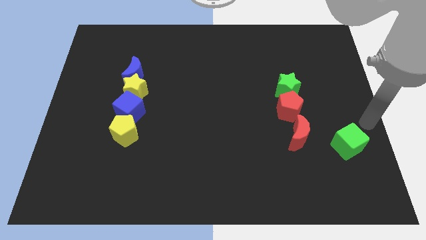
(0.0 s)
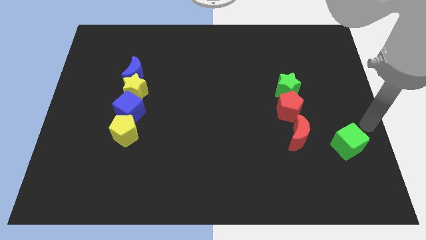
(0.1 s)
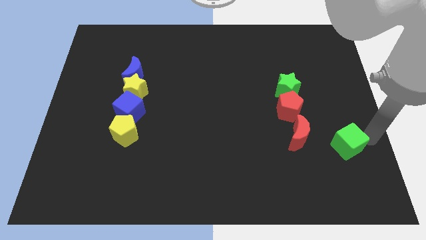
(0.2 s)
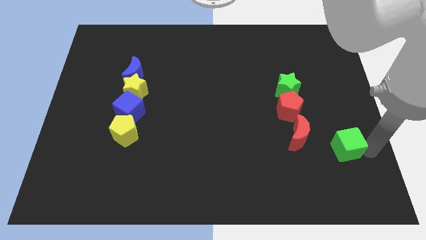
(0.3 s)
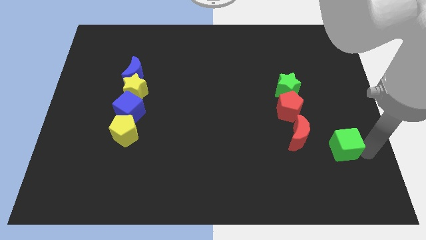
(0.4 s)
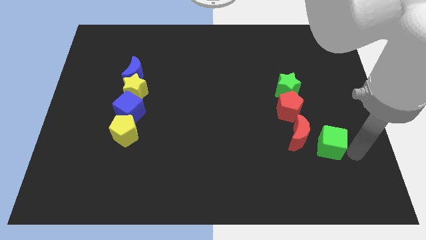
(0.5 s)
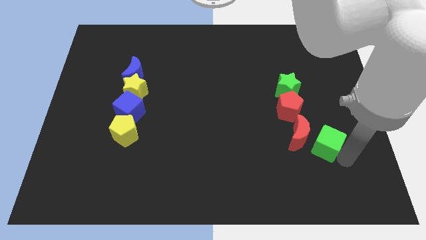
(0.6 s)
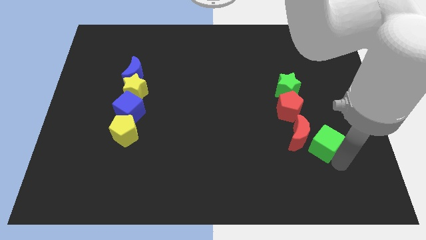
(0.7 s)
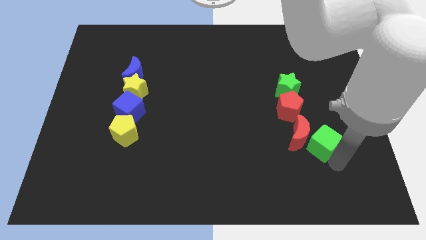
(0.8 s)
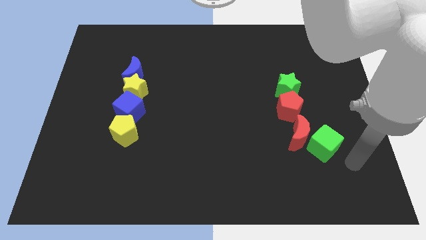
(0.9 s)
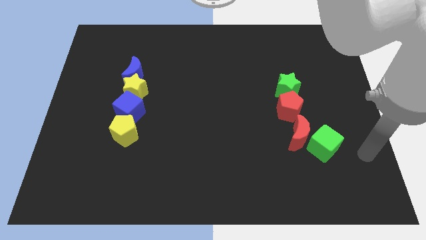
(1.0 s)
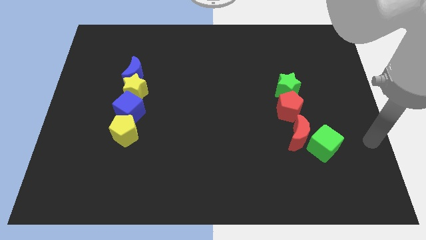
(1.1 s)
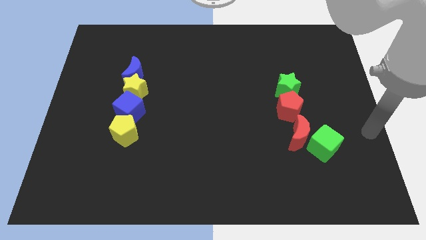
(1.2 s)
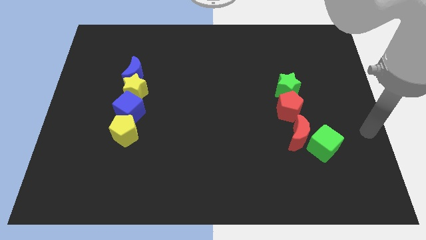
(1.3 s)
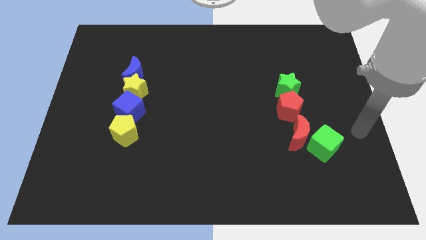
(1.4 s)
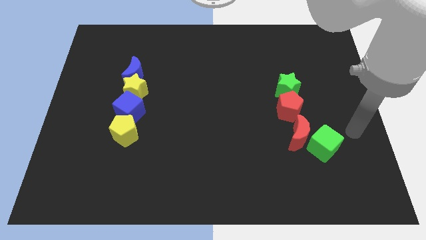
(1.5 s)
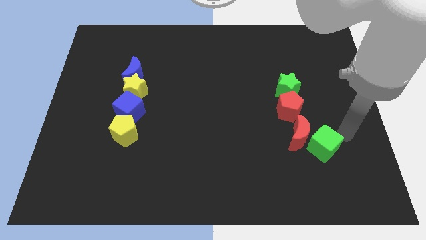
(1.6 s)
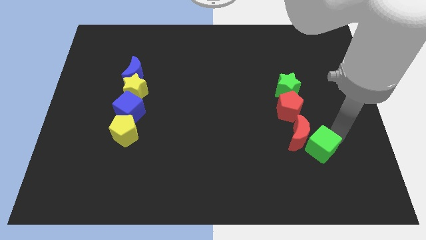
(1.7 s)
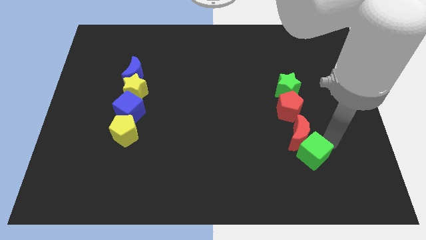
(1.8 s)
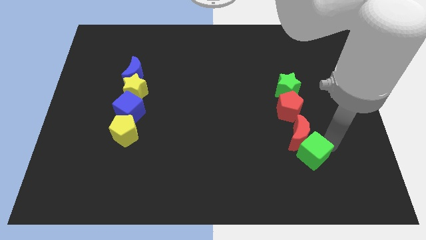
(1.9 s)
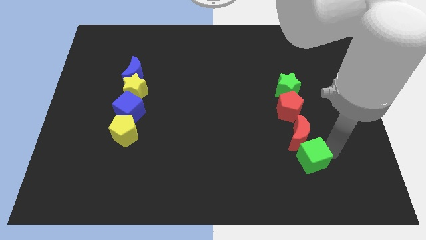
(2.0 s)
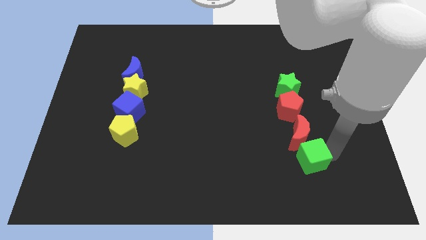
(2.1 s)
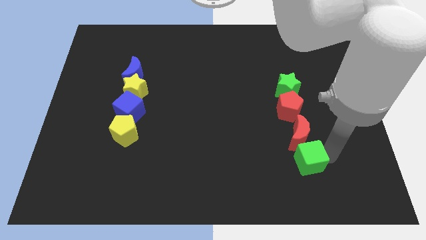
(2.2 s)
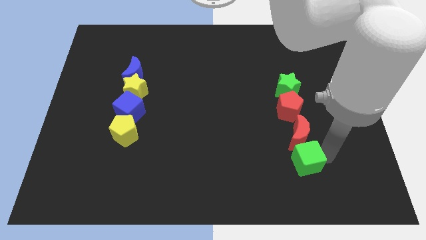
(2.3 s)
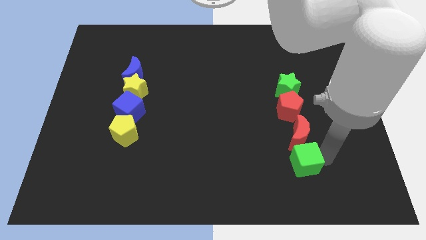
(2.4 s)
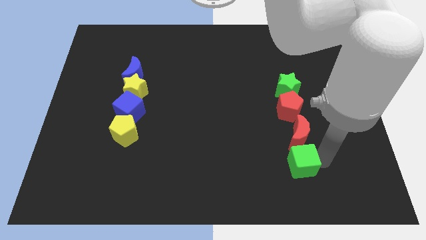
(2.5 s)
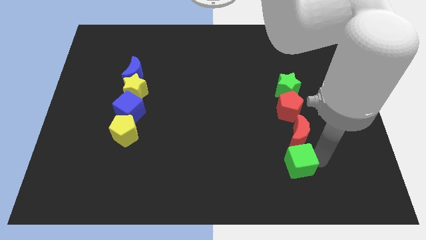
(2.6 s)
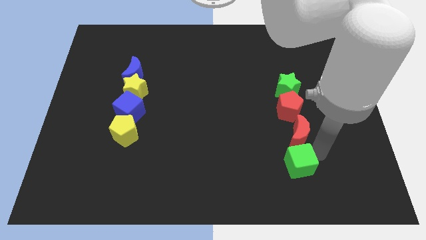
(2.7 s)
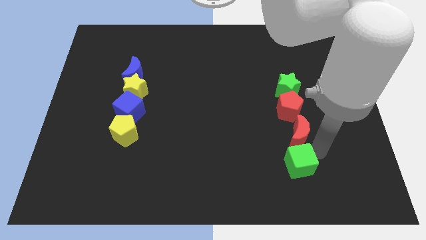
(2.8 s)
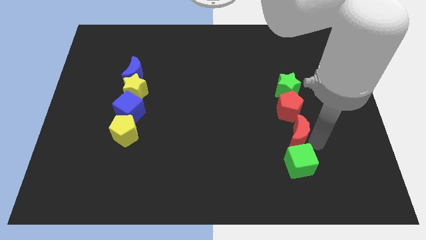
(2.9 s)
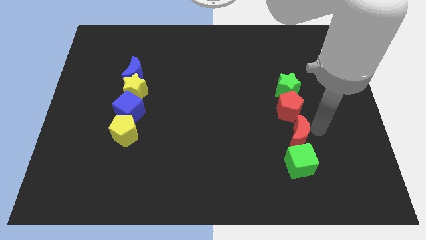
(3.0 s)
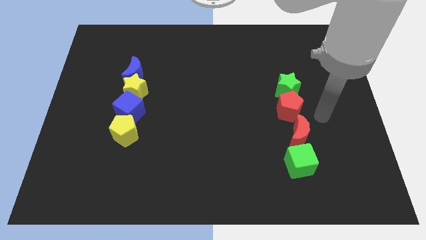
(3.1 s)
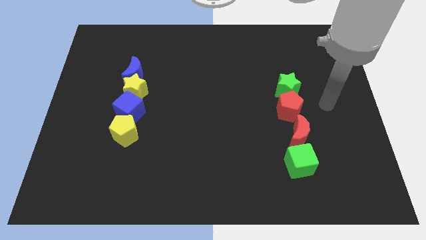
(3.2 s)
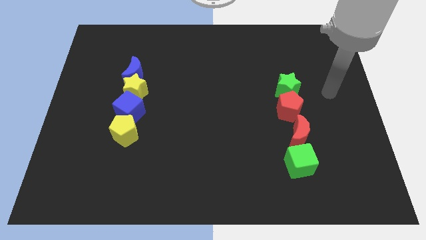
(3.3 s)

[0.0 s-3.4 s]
move the green cube to the bottom of the red moon

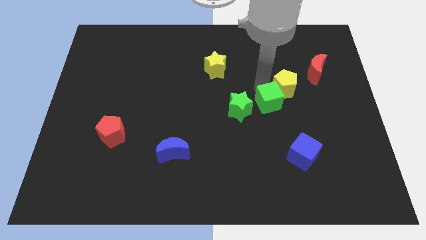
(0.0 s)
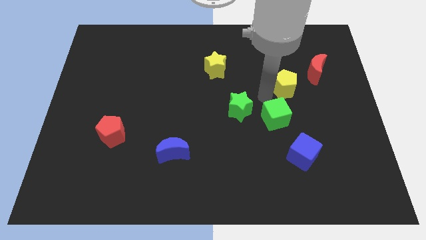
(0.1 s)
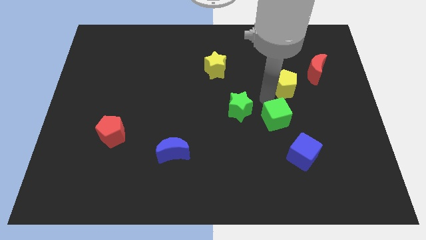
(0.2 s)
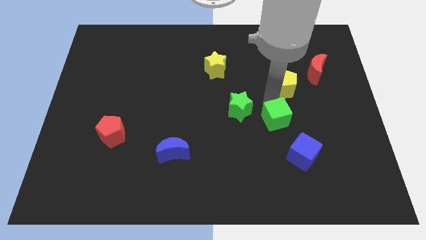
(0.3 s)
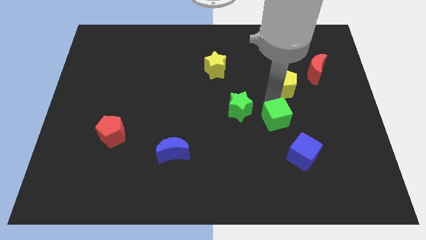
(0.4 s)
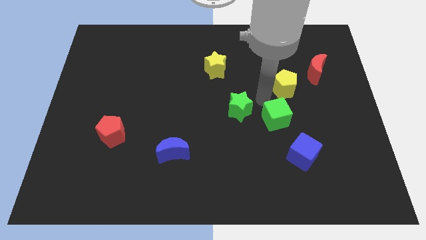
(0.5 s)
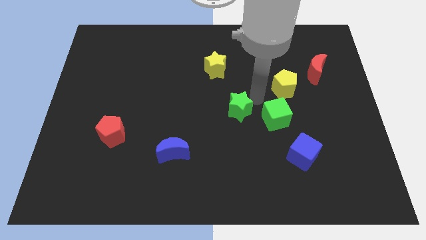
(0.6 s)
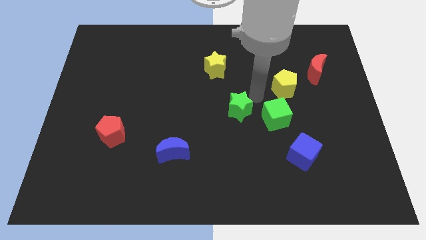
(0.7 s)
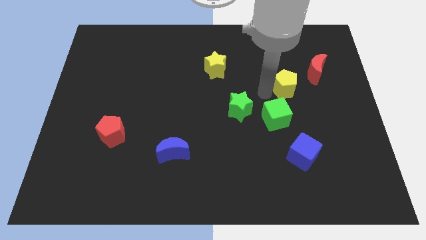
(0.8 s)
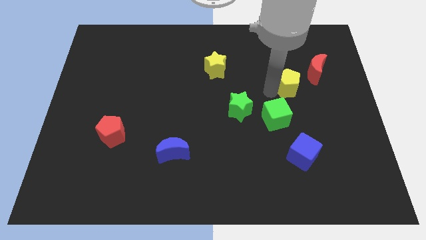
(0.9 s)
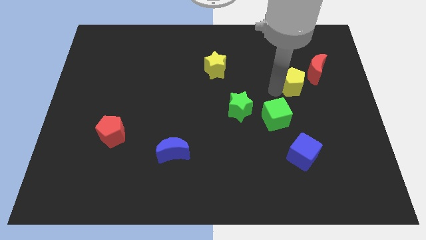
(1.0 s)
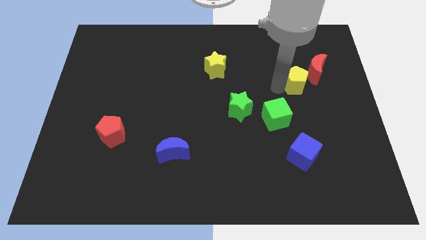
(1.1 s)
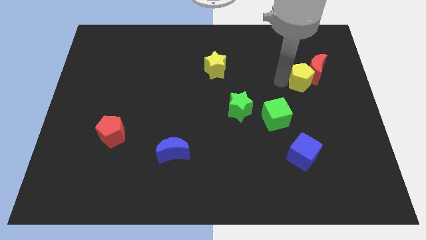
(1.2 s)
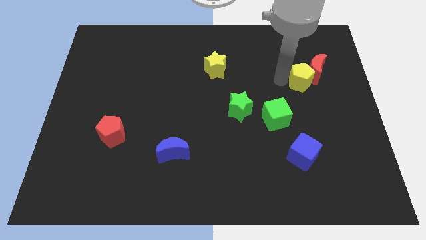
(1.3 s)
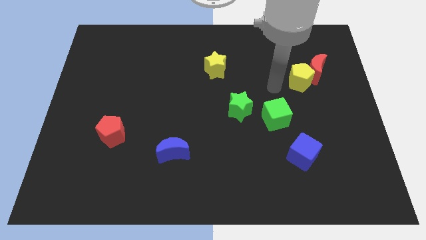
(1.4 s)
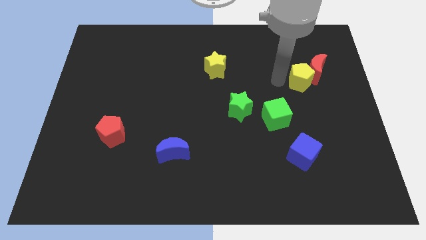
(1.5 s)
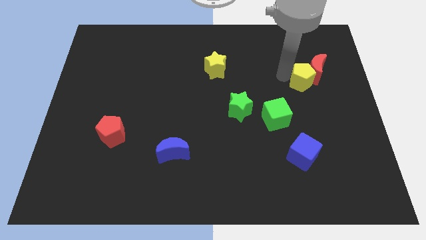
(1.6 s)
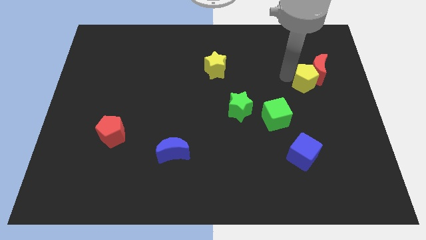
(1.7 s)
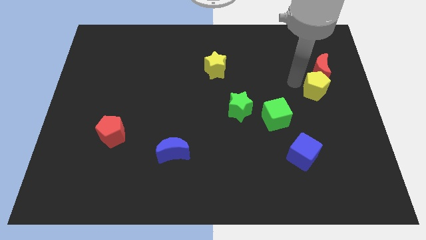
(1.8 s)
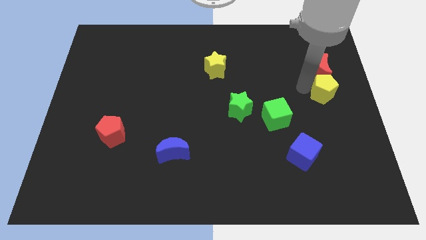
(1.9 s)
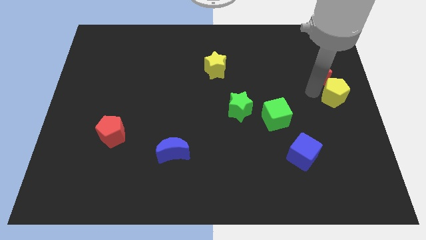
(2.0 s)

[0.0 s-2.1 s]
move yellow pentagon towards center right

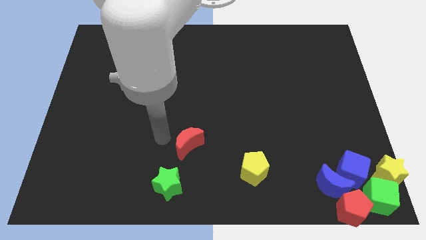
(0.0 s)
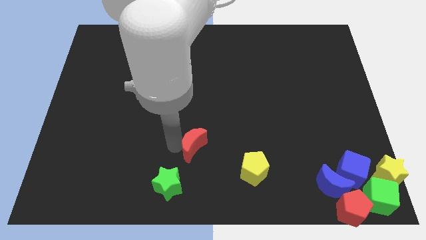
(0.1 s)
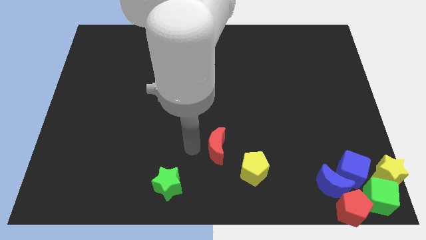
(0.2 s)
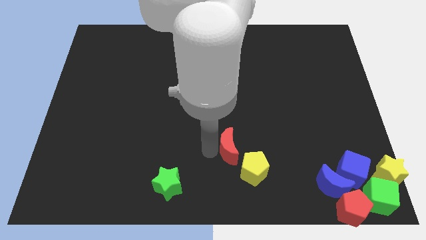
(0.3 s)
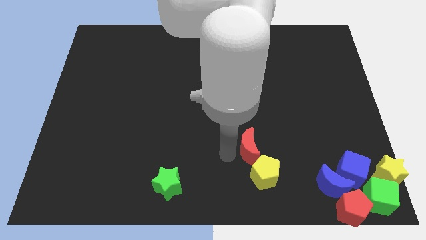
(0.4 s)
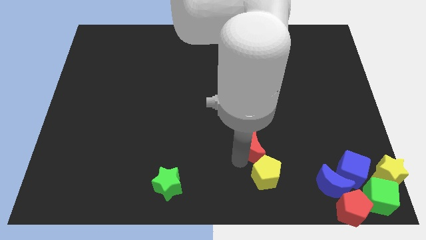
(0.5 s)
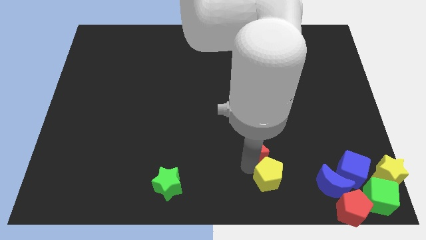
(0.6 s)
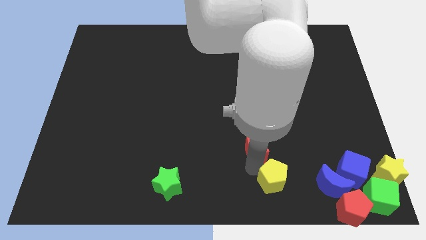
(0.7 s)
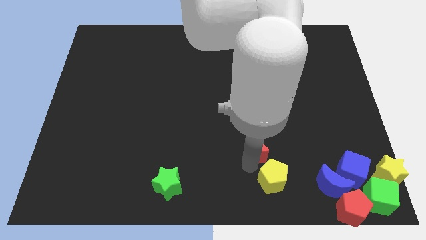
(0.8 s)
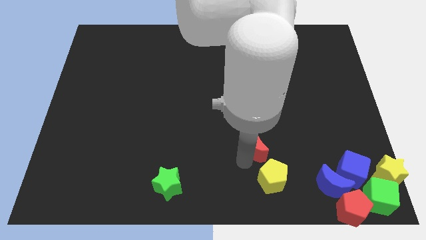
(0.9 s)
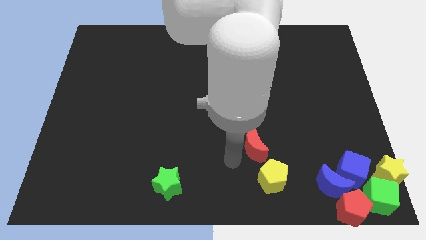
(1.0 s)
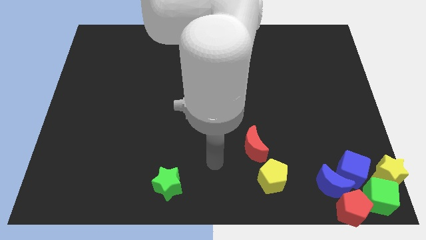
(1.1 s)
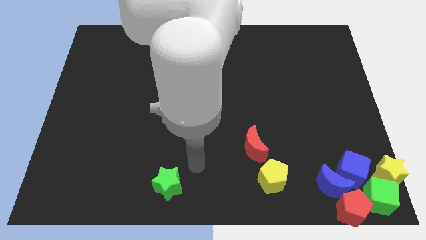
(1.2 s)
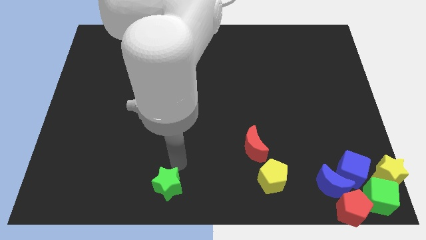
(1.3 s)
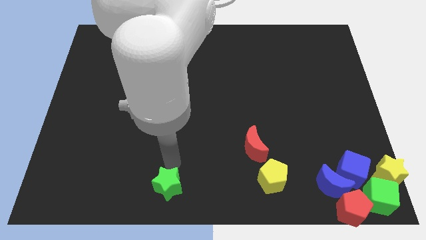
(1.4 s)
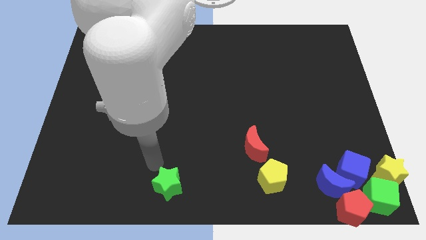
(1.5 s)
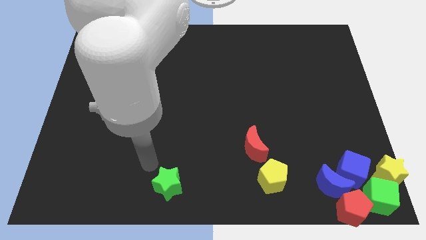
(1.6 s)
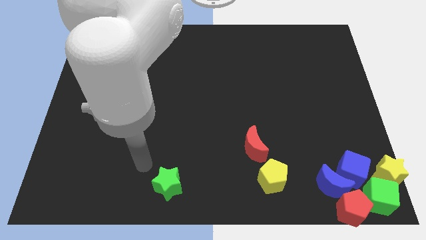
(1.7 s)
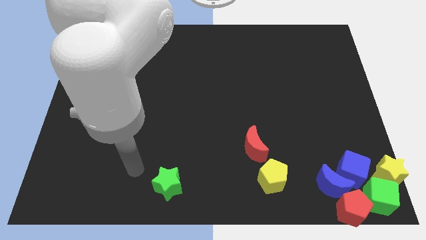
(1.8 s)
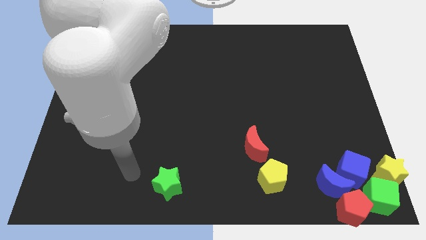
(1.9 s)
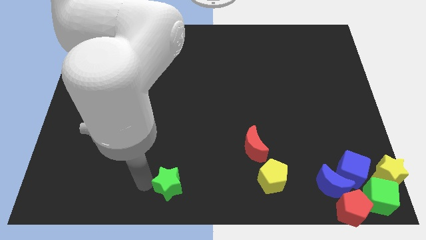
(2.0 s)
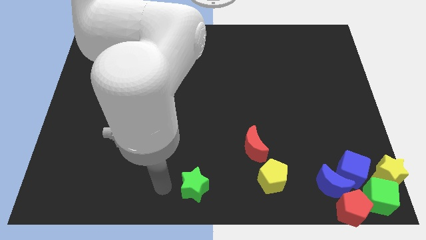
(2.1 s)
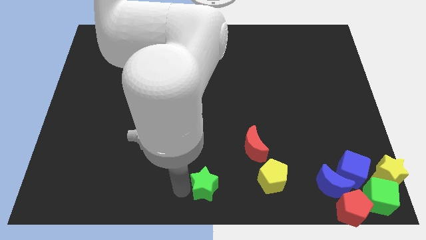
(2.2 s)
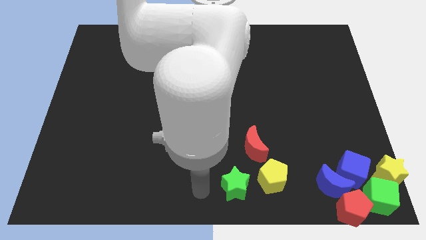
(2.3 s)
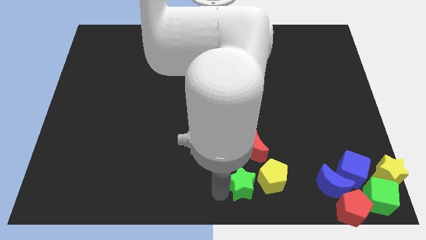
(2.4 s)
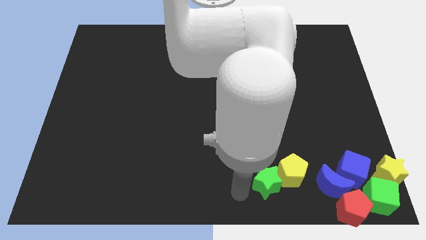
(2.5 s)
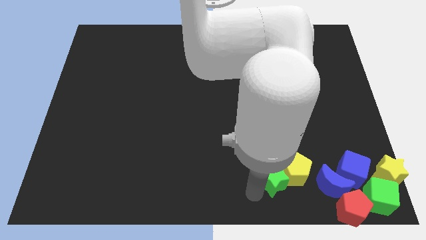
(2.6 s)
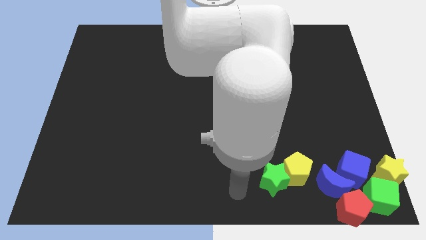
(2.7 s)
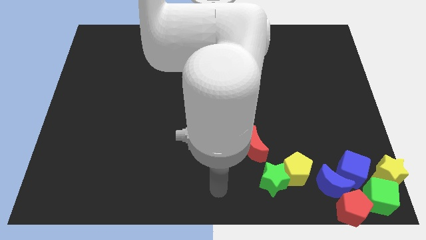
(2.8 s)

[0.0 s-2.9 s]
place red moon and green star towards the yellow pentagon at bottom center

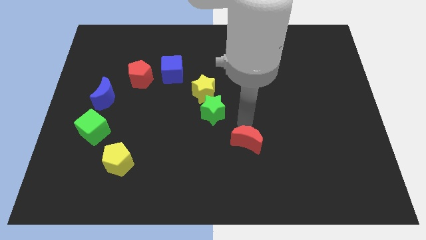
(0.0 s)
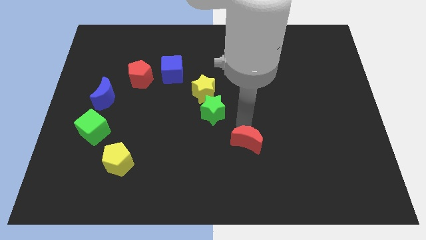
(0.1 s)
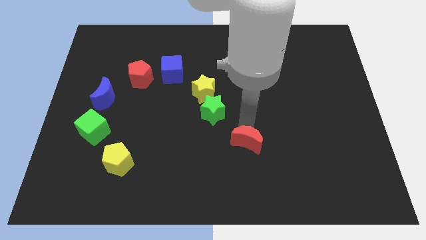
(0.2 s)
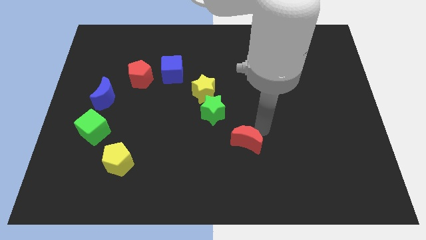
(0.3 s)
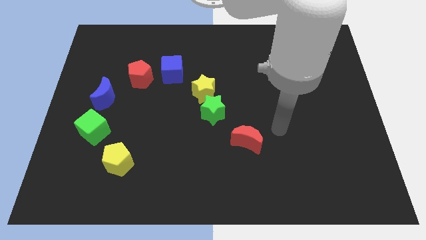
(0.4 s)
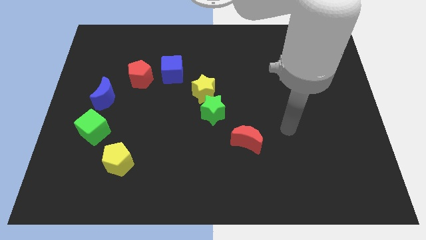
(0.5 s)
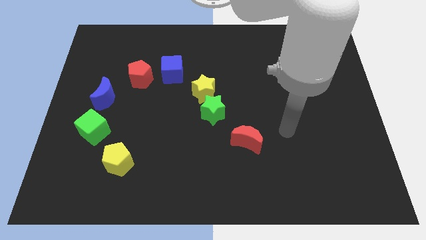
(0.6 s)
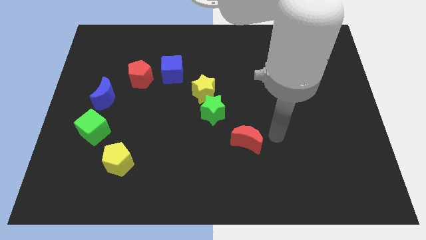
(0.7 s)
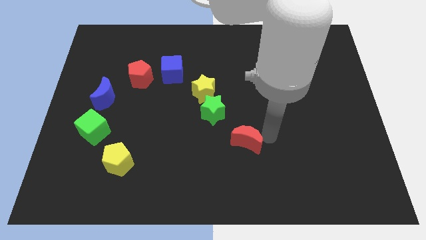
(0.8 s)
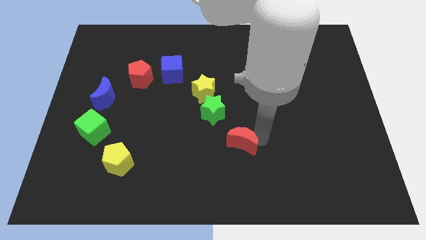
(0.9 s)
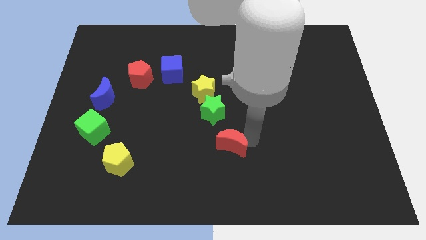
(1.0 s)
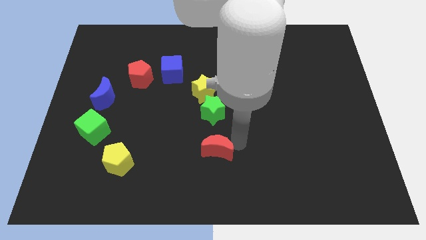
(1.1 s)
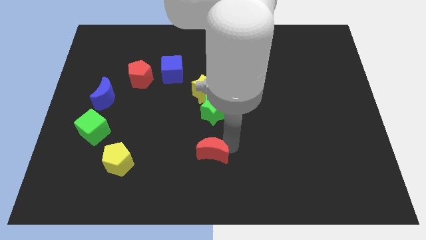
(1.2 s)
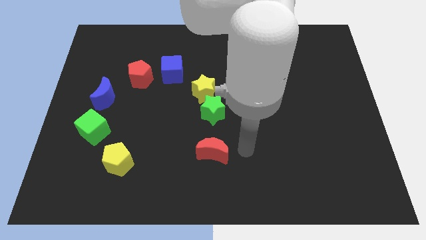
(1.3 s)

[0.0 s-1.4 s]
place the red crescent below the green star
